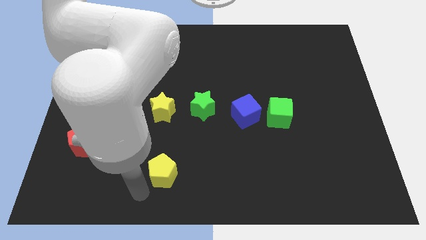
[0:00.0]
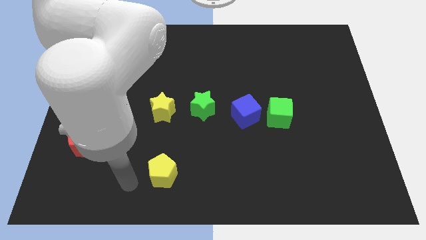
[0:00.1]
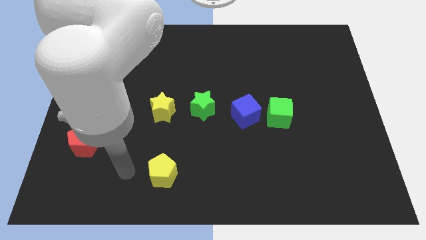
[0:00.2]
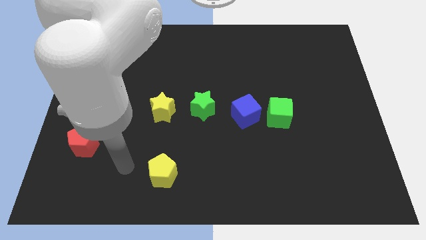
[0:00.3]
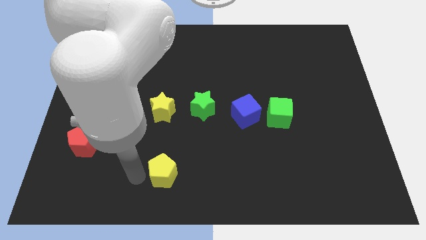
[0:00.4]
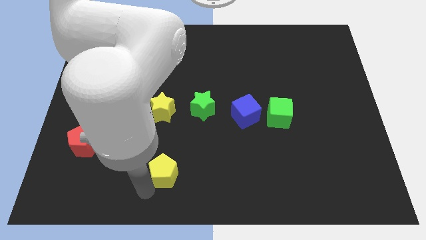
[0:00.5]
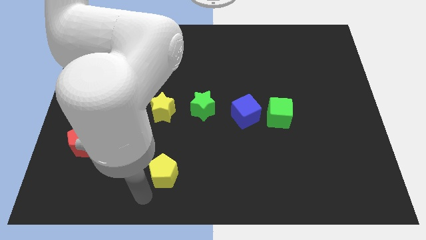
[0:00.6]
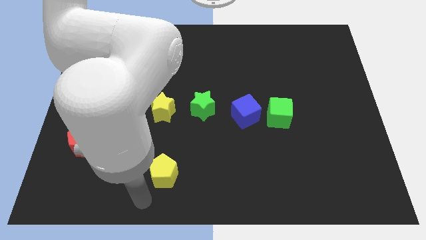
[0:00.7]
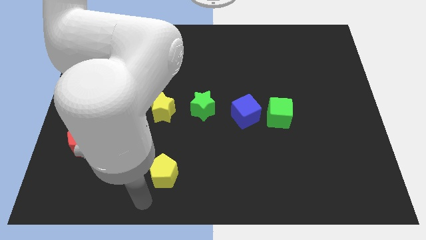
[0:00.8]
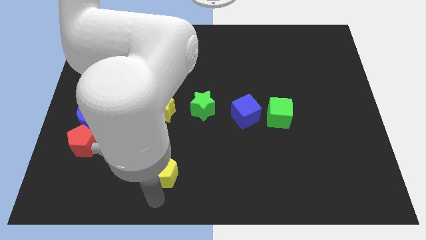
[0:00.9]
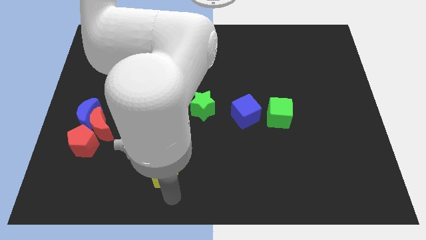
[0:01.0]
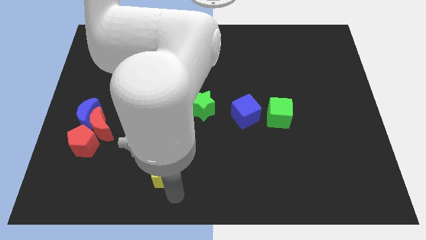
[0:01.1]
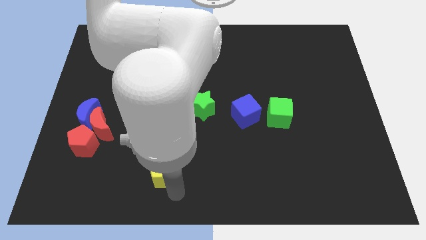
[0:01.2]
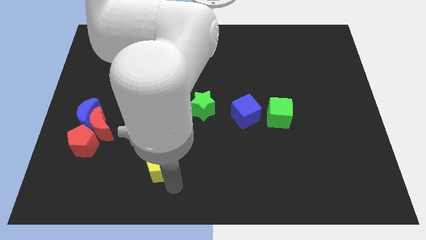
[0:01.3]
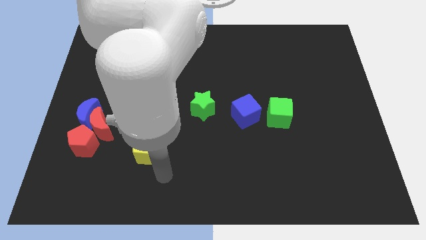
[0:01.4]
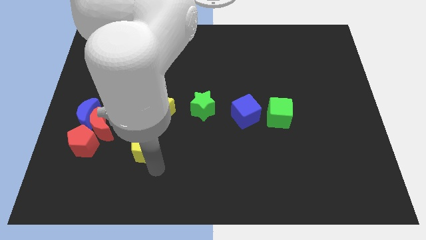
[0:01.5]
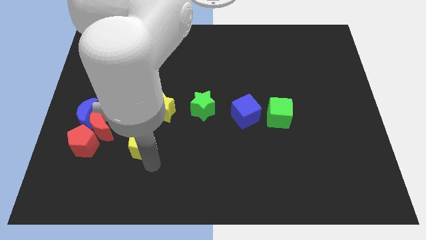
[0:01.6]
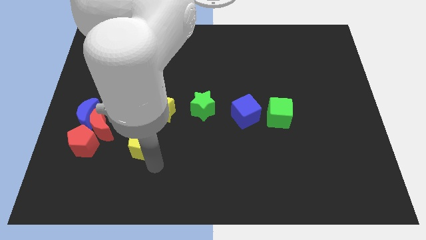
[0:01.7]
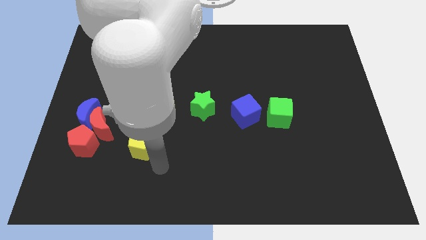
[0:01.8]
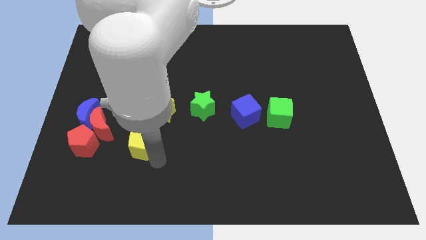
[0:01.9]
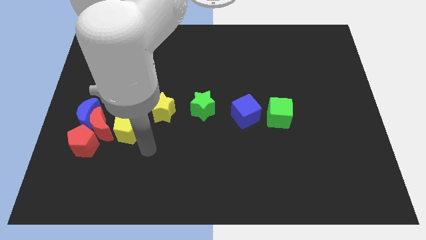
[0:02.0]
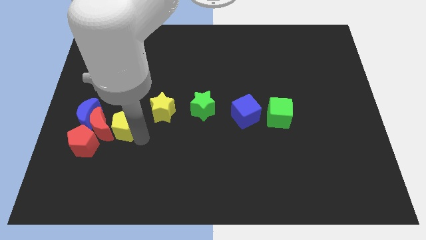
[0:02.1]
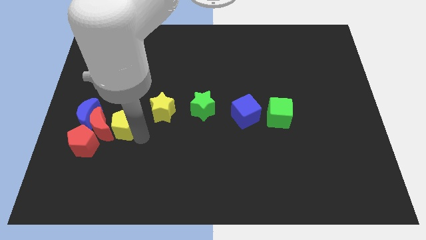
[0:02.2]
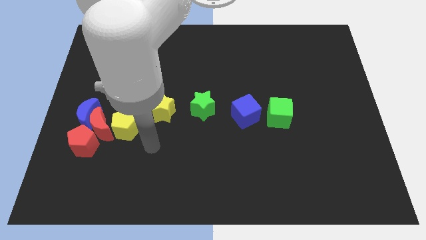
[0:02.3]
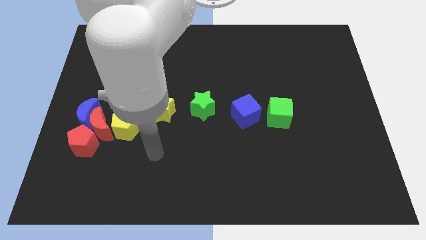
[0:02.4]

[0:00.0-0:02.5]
move the yellow pentagon left below the yellow star

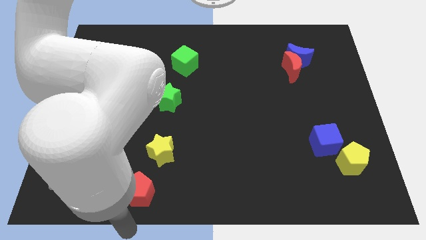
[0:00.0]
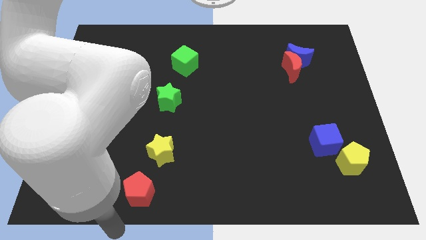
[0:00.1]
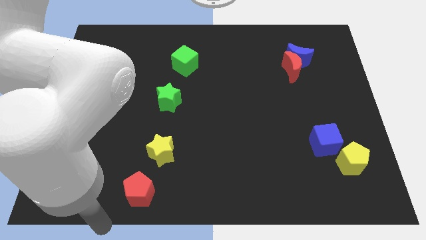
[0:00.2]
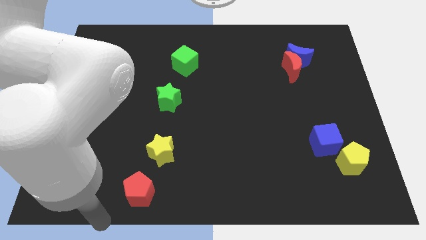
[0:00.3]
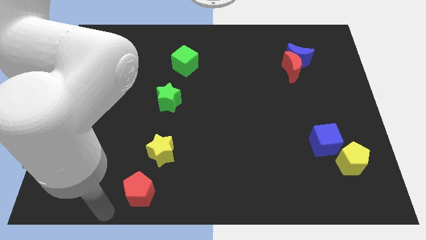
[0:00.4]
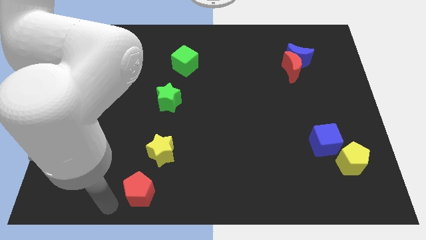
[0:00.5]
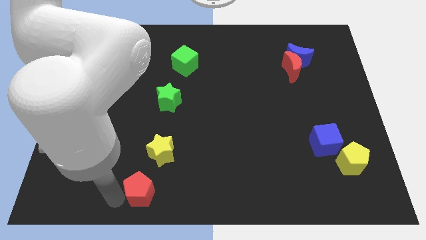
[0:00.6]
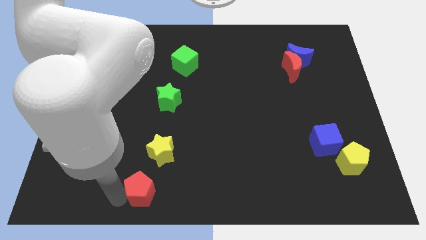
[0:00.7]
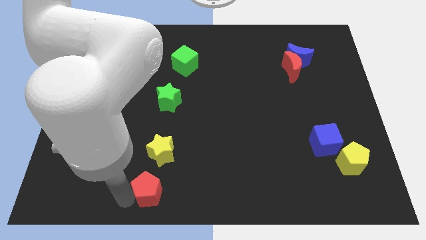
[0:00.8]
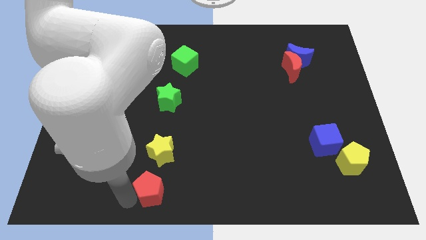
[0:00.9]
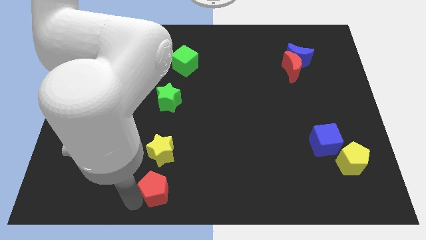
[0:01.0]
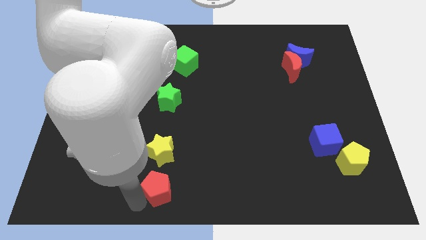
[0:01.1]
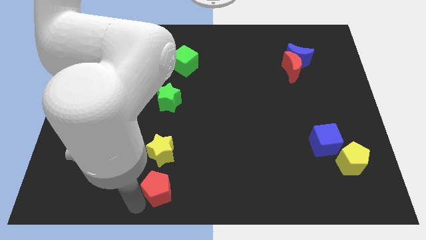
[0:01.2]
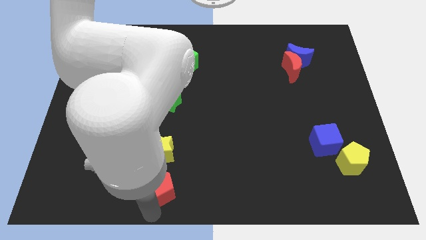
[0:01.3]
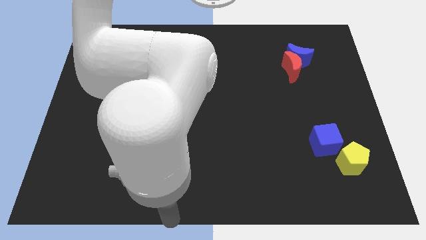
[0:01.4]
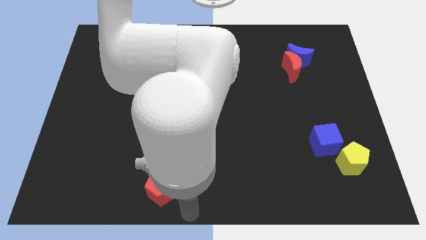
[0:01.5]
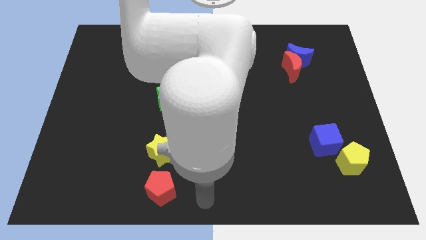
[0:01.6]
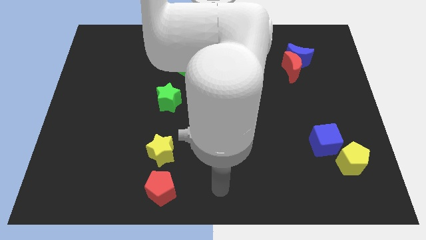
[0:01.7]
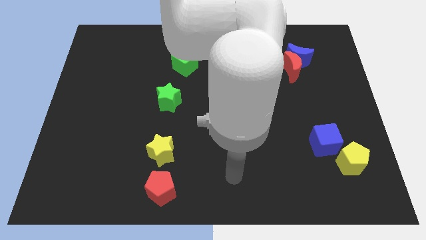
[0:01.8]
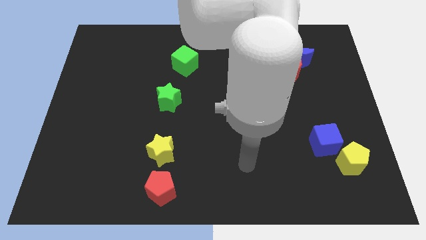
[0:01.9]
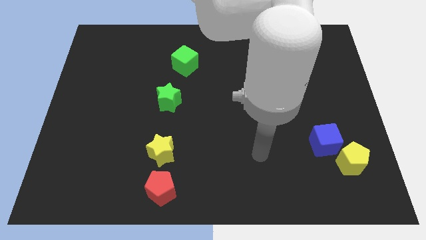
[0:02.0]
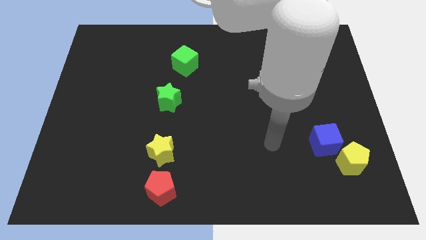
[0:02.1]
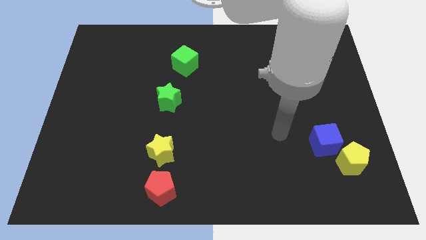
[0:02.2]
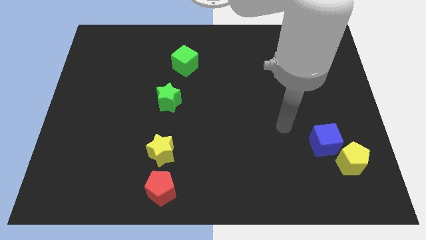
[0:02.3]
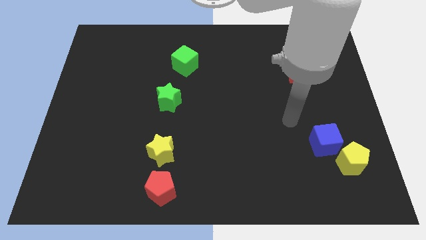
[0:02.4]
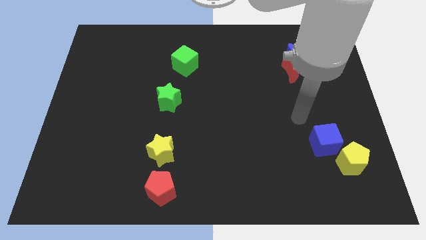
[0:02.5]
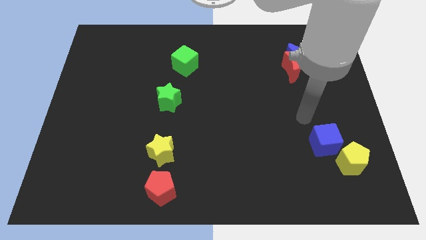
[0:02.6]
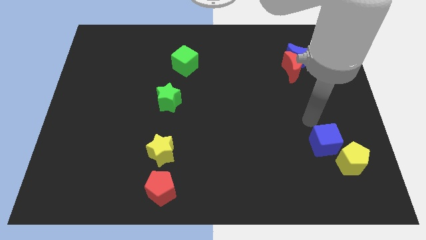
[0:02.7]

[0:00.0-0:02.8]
place red pentagon exactly down to the yellow star

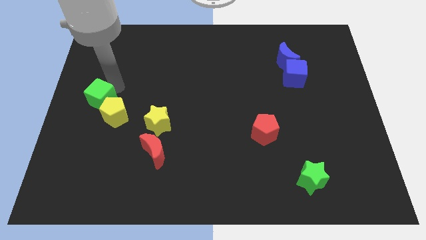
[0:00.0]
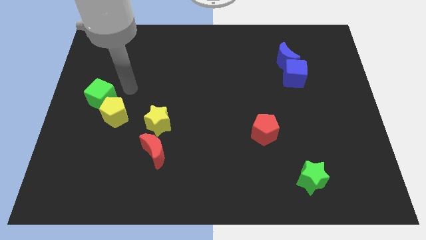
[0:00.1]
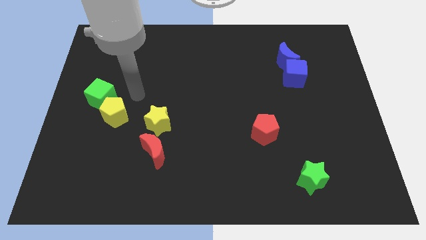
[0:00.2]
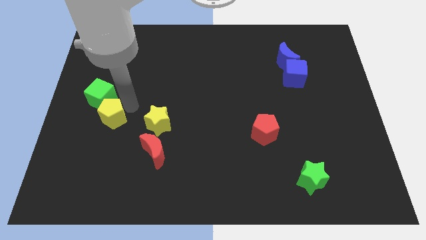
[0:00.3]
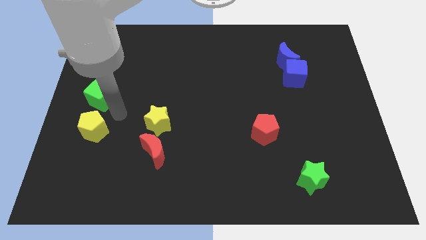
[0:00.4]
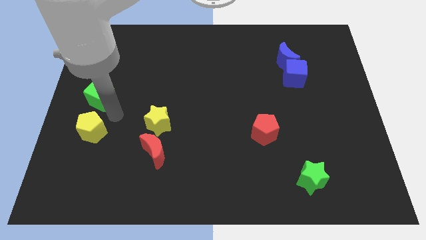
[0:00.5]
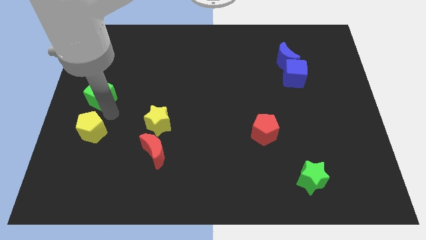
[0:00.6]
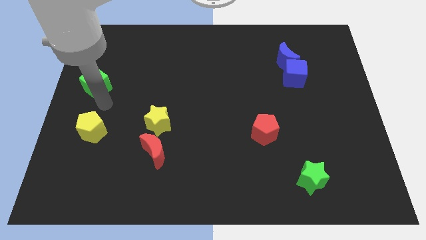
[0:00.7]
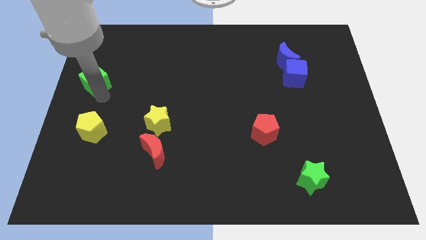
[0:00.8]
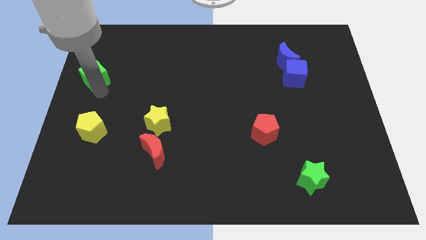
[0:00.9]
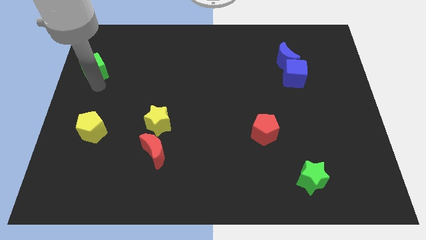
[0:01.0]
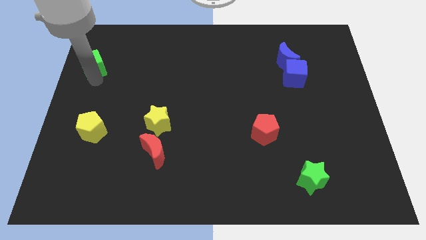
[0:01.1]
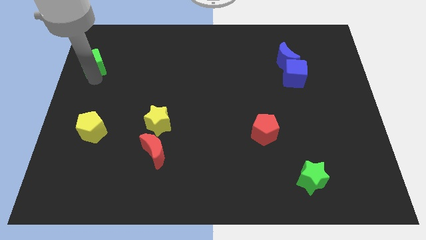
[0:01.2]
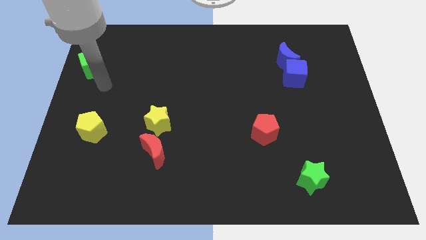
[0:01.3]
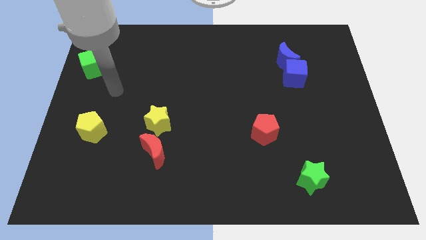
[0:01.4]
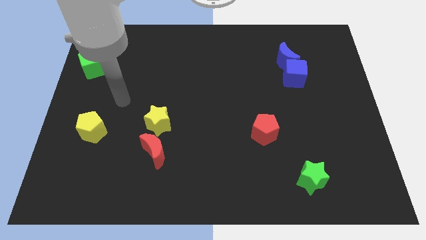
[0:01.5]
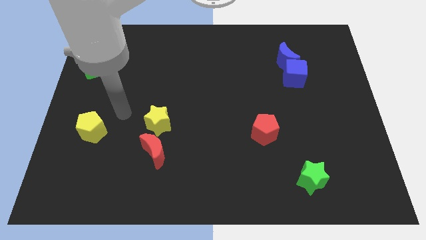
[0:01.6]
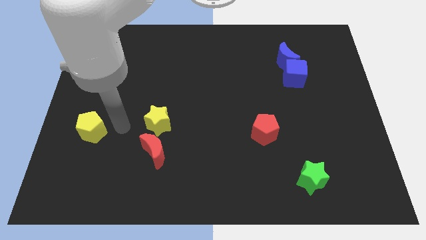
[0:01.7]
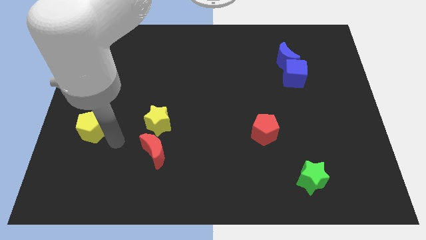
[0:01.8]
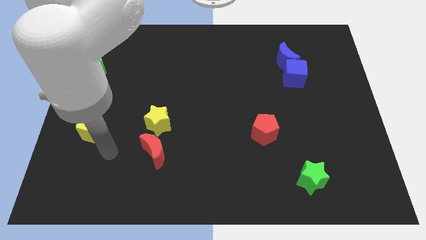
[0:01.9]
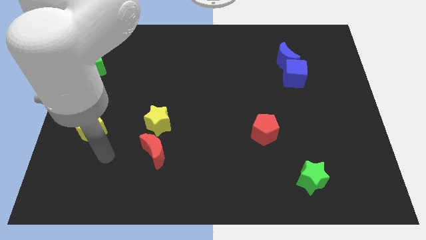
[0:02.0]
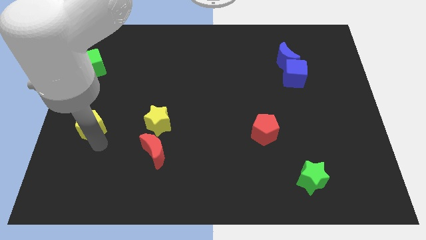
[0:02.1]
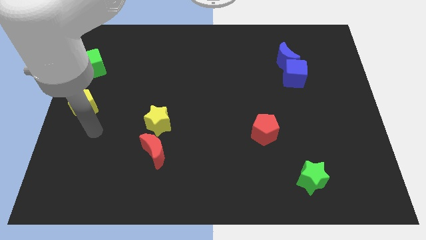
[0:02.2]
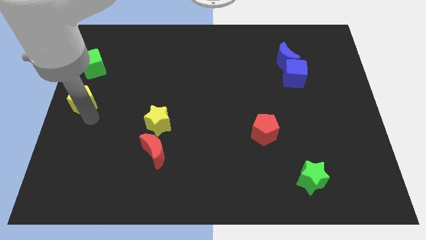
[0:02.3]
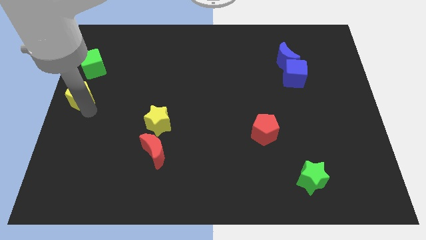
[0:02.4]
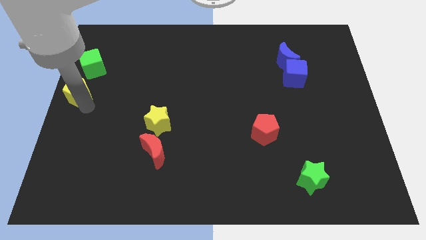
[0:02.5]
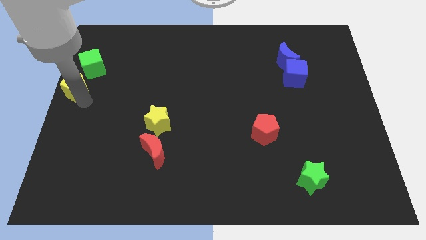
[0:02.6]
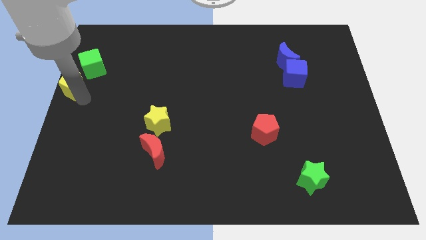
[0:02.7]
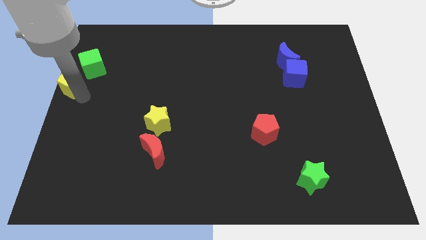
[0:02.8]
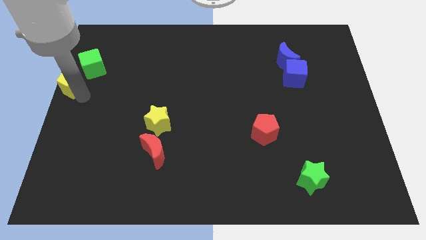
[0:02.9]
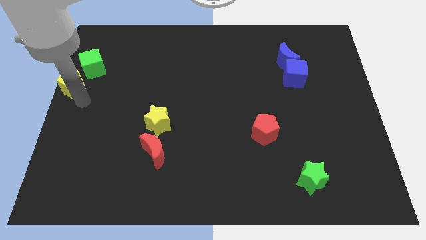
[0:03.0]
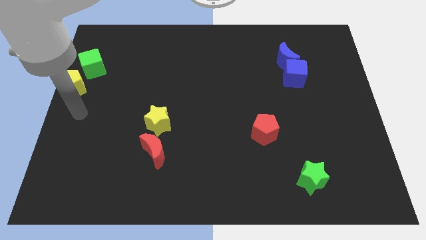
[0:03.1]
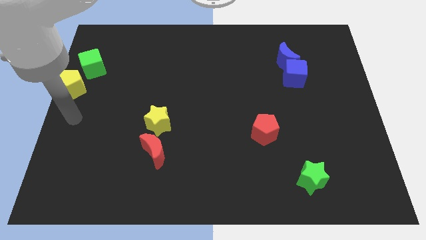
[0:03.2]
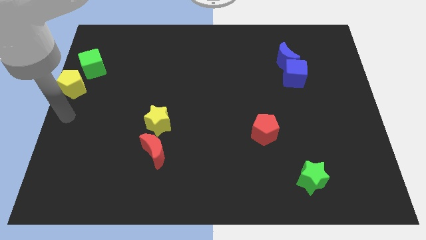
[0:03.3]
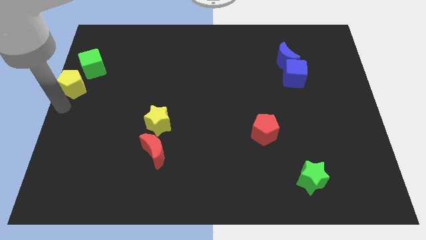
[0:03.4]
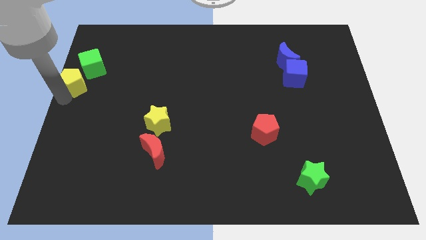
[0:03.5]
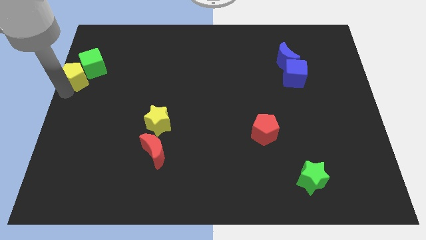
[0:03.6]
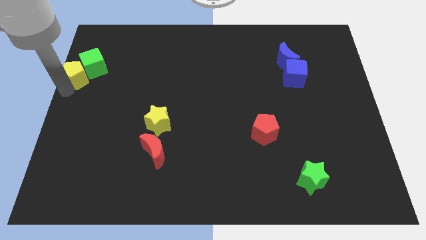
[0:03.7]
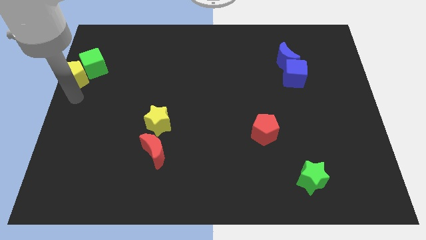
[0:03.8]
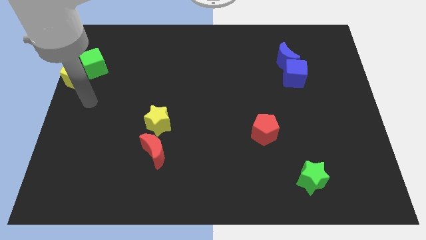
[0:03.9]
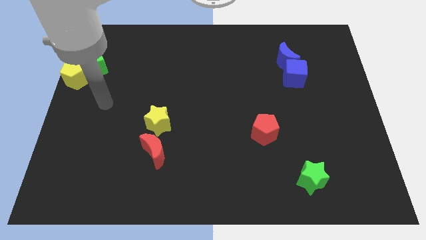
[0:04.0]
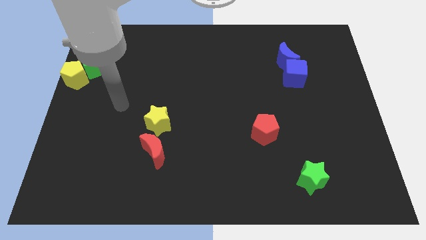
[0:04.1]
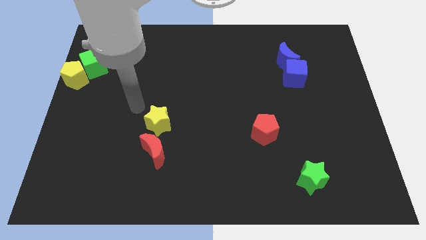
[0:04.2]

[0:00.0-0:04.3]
push the yellow pentagon to the bottom left side of the green cube
